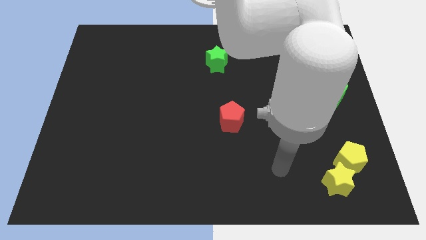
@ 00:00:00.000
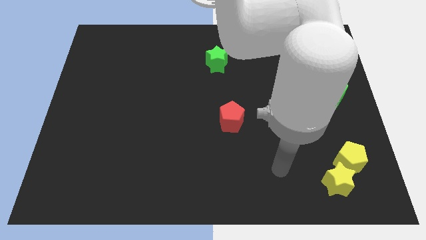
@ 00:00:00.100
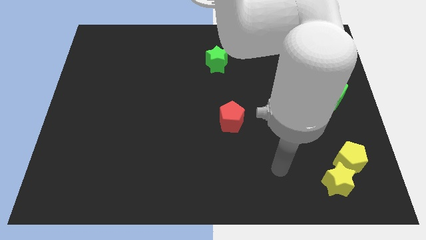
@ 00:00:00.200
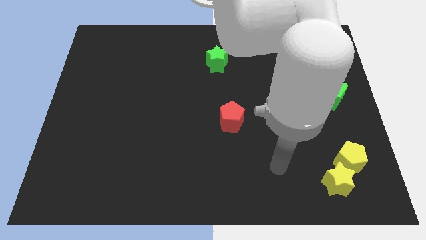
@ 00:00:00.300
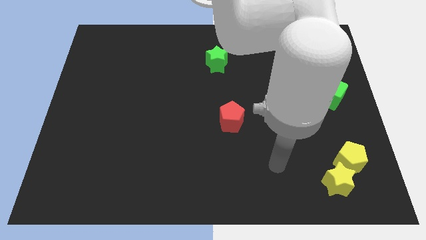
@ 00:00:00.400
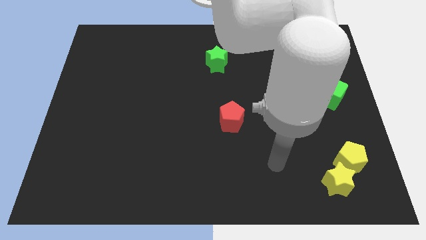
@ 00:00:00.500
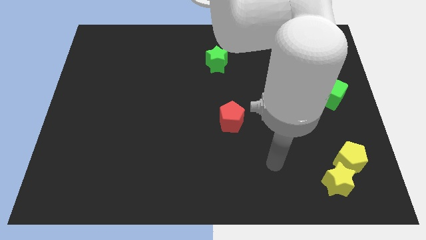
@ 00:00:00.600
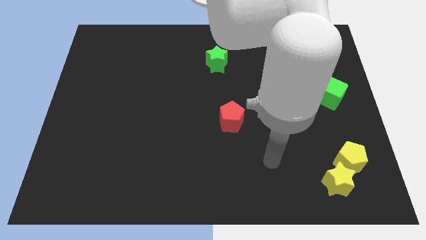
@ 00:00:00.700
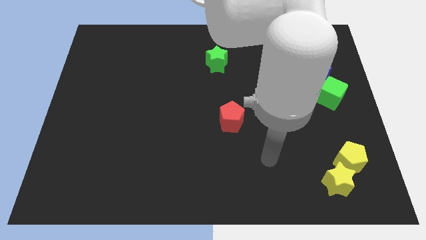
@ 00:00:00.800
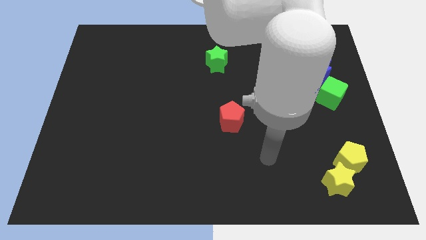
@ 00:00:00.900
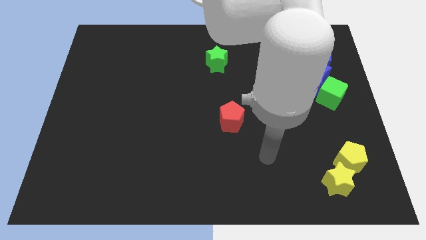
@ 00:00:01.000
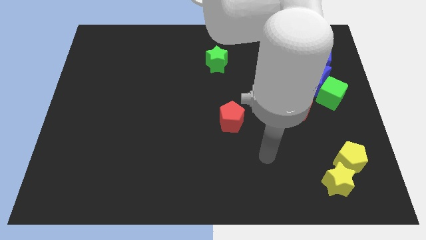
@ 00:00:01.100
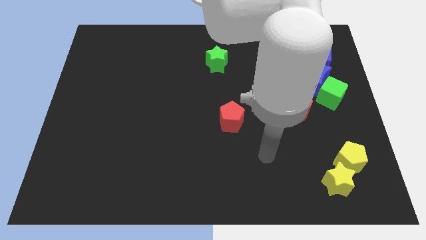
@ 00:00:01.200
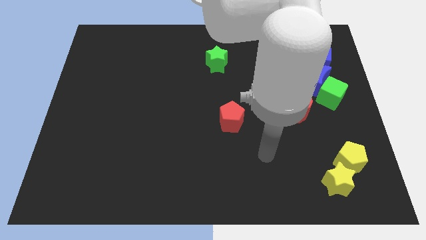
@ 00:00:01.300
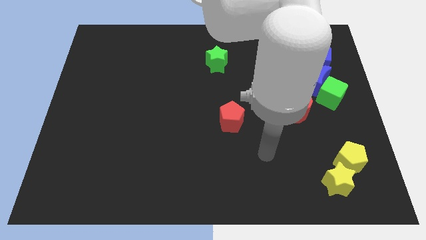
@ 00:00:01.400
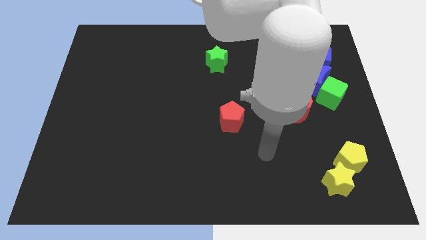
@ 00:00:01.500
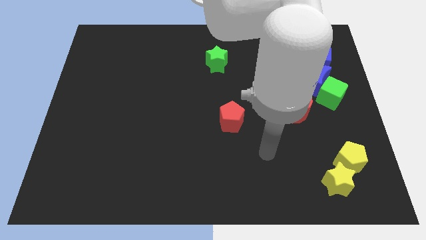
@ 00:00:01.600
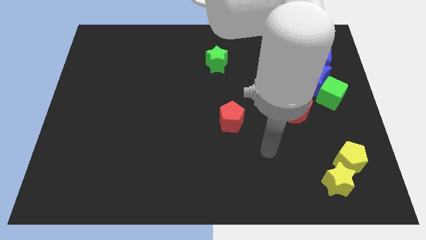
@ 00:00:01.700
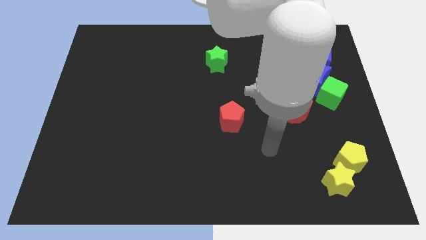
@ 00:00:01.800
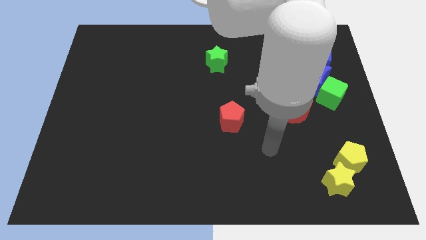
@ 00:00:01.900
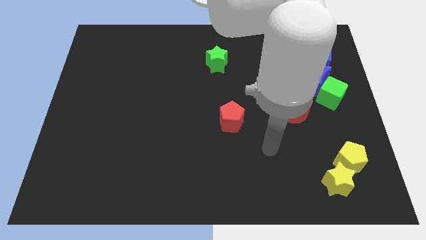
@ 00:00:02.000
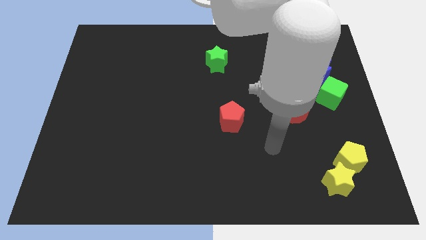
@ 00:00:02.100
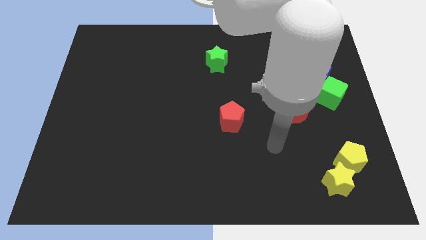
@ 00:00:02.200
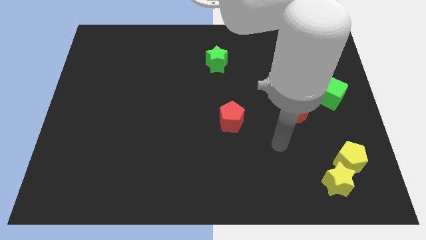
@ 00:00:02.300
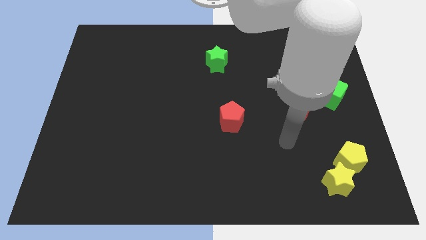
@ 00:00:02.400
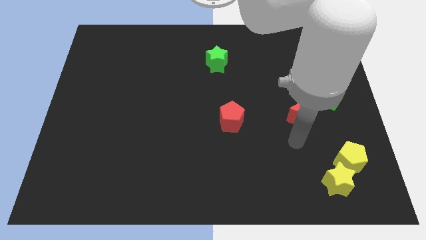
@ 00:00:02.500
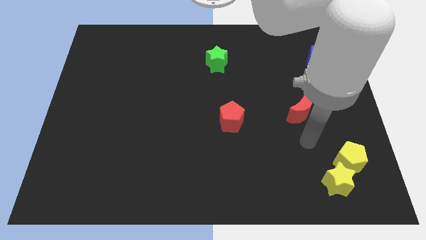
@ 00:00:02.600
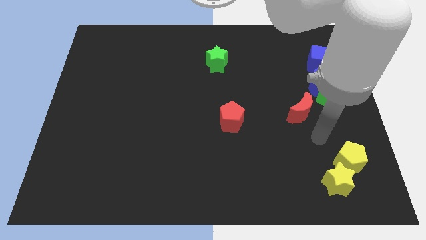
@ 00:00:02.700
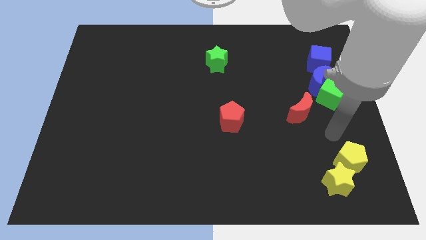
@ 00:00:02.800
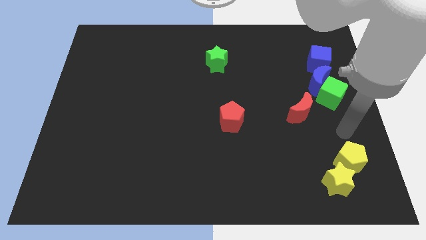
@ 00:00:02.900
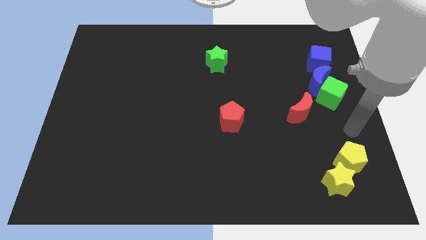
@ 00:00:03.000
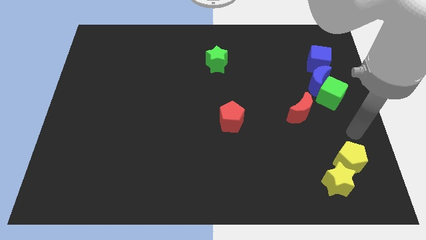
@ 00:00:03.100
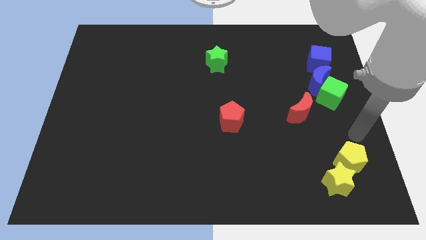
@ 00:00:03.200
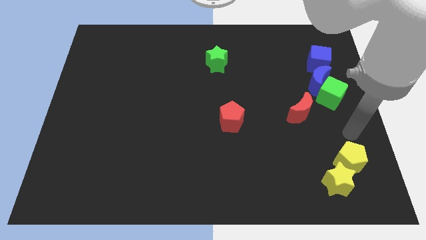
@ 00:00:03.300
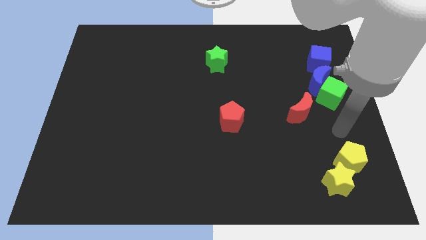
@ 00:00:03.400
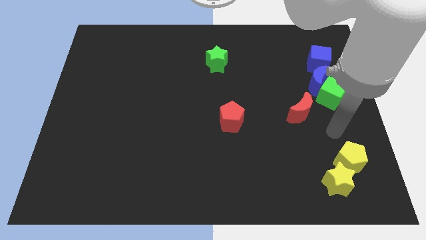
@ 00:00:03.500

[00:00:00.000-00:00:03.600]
point your arm to the top of the yellow pentagon

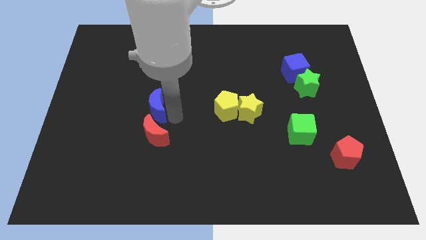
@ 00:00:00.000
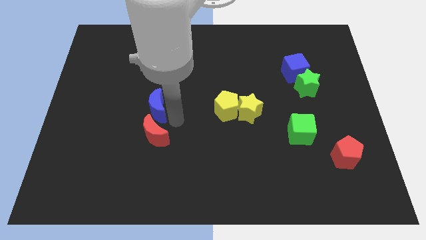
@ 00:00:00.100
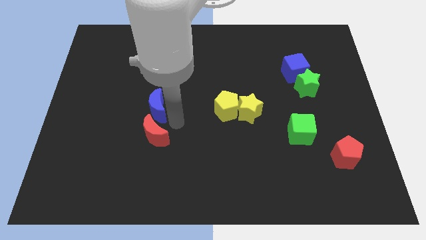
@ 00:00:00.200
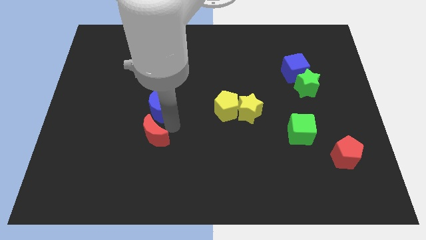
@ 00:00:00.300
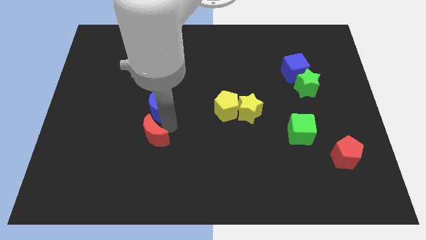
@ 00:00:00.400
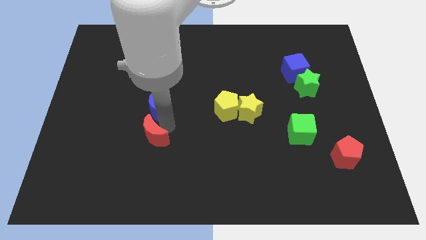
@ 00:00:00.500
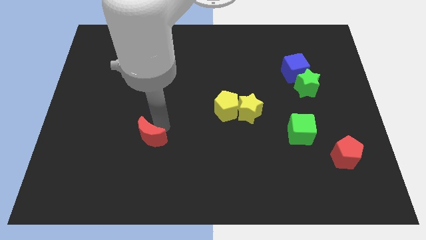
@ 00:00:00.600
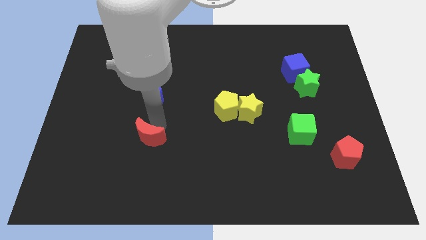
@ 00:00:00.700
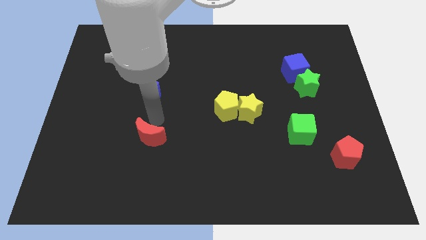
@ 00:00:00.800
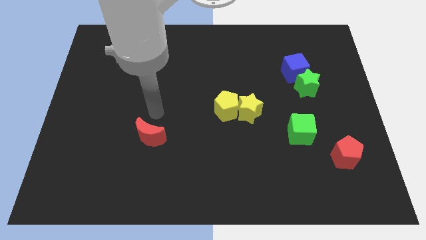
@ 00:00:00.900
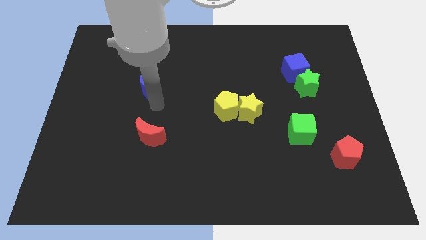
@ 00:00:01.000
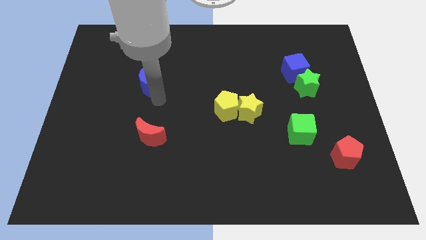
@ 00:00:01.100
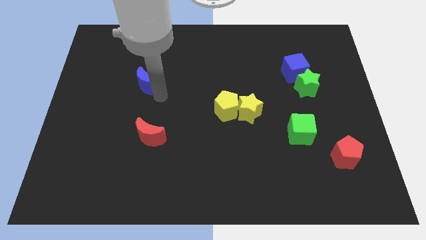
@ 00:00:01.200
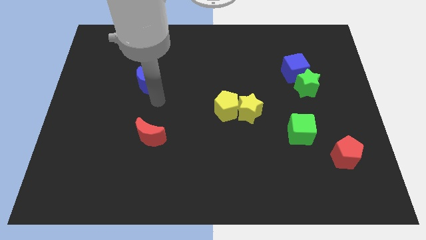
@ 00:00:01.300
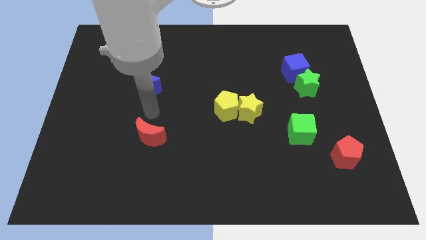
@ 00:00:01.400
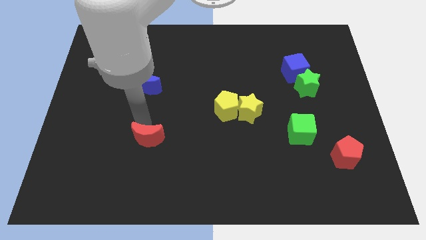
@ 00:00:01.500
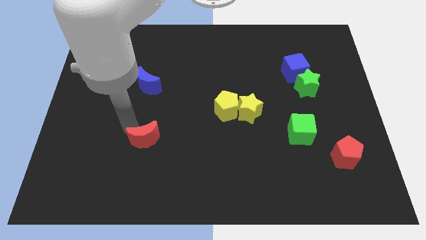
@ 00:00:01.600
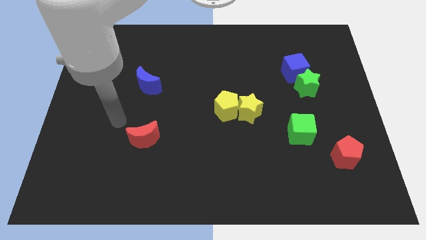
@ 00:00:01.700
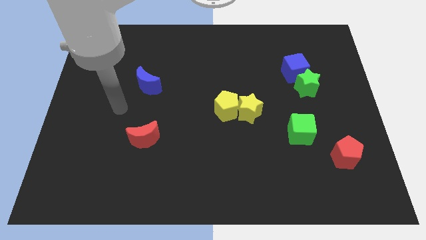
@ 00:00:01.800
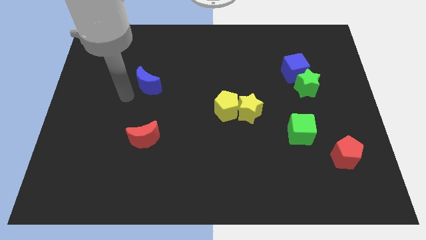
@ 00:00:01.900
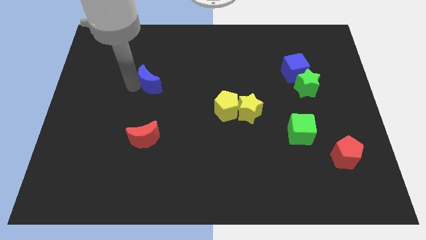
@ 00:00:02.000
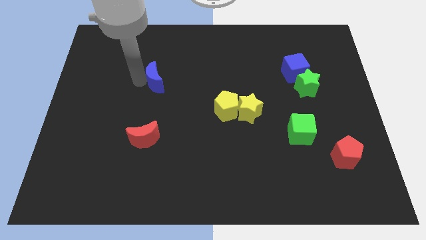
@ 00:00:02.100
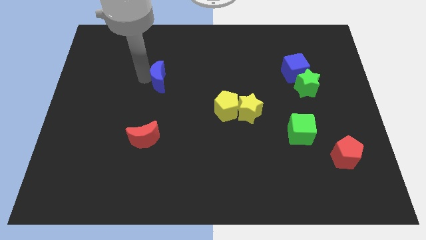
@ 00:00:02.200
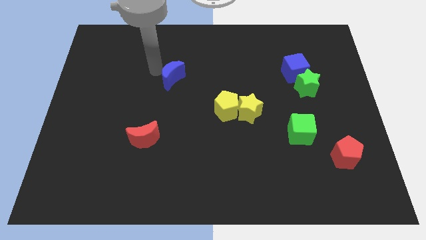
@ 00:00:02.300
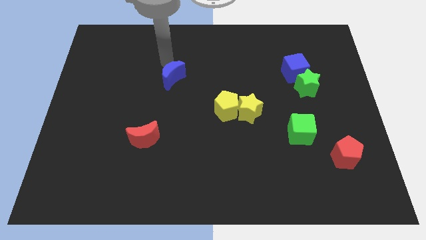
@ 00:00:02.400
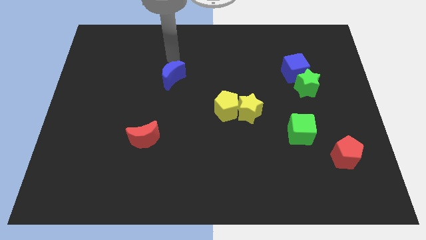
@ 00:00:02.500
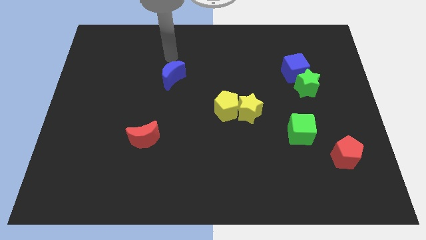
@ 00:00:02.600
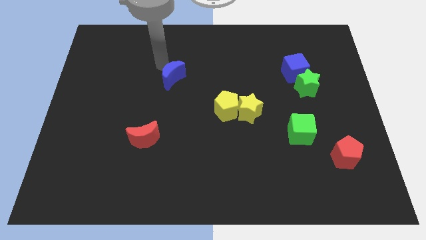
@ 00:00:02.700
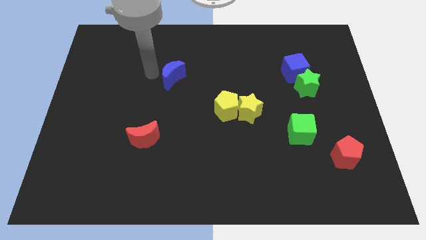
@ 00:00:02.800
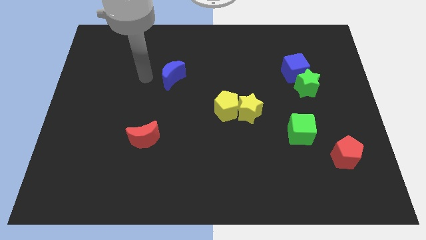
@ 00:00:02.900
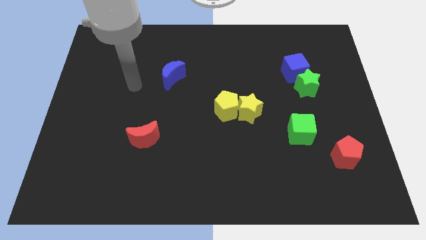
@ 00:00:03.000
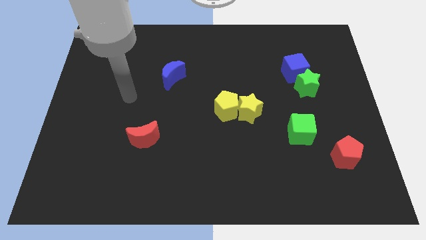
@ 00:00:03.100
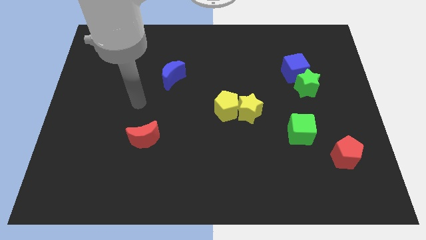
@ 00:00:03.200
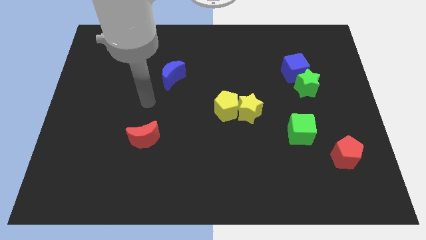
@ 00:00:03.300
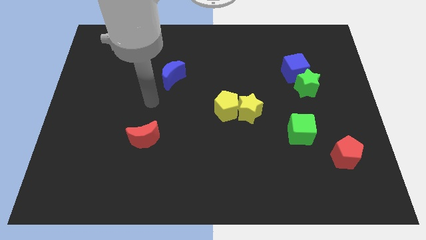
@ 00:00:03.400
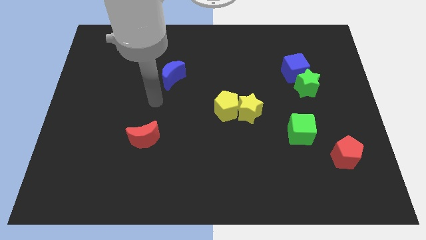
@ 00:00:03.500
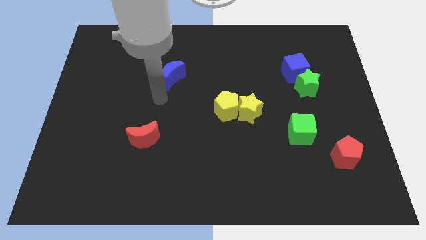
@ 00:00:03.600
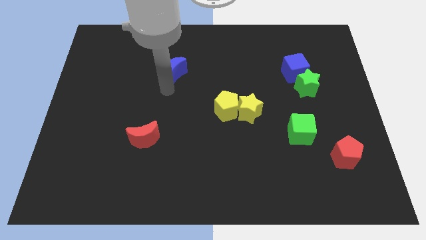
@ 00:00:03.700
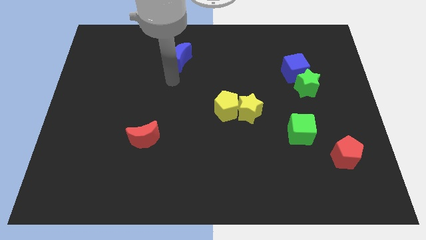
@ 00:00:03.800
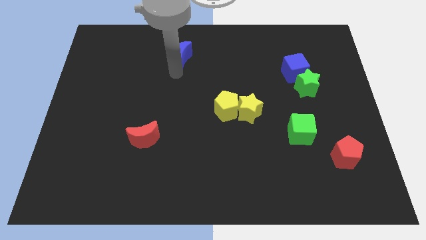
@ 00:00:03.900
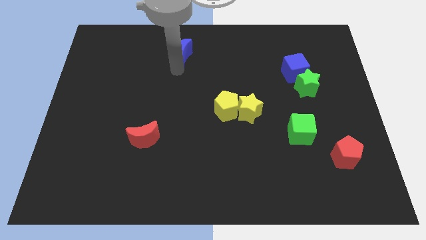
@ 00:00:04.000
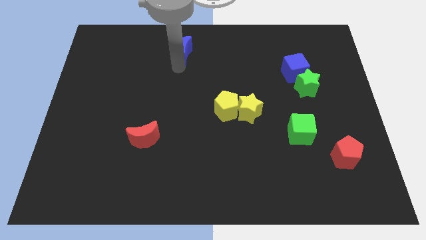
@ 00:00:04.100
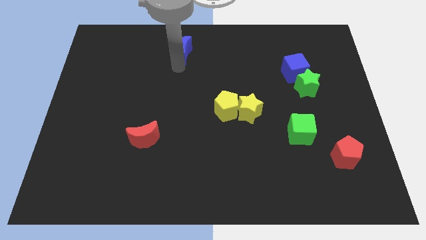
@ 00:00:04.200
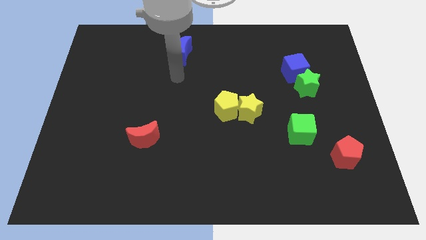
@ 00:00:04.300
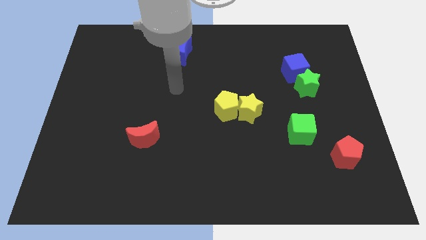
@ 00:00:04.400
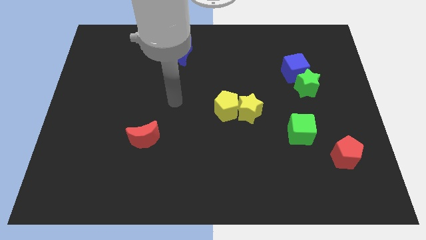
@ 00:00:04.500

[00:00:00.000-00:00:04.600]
move the blue crescent to the top of the board

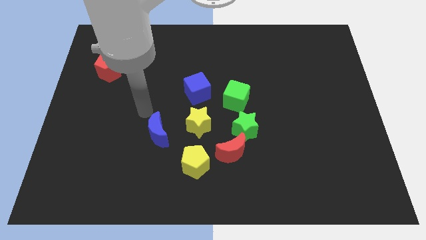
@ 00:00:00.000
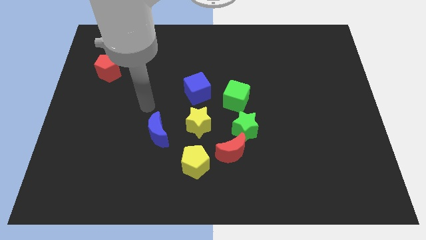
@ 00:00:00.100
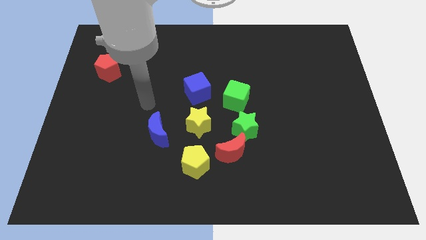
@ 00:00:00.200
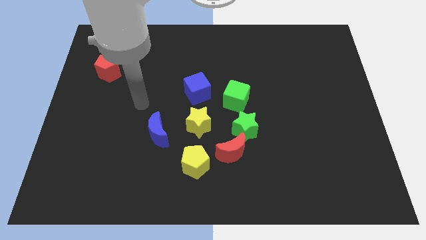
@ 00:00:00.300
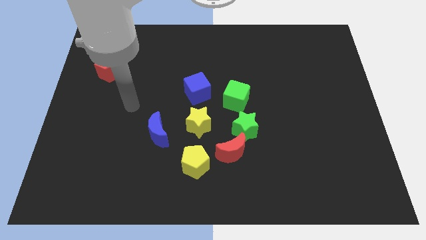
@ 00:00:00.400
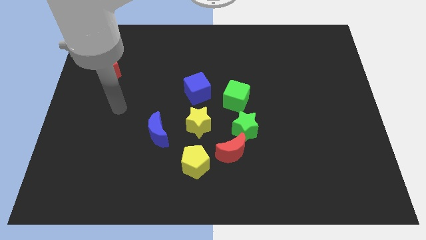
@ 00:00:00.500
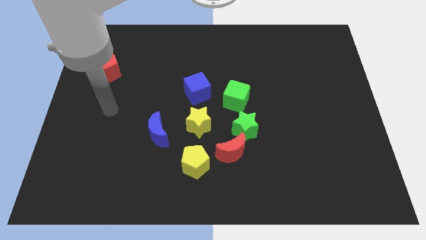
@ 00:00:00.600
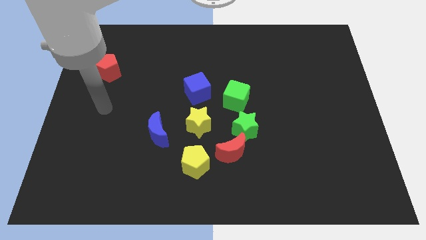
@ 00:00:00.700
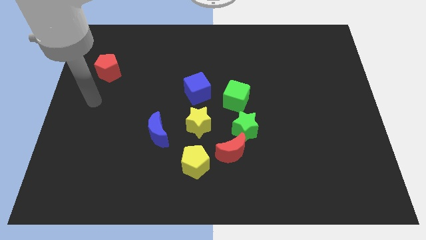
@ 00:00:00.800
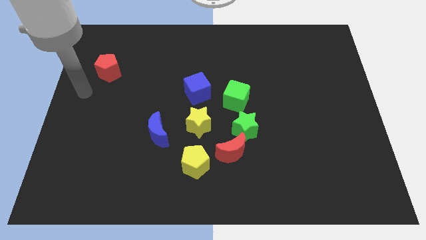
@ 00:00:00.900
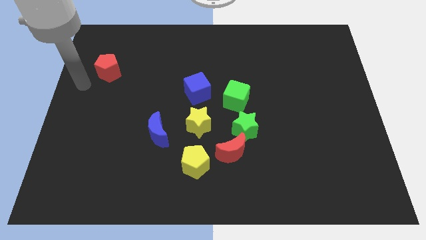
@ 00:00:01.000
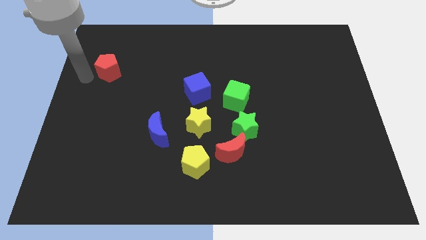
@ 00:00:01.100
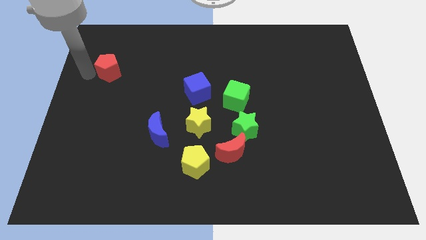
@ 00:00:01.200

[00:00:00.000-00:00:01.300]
move your arm to the left of red pentagon
